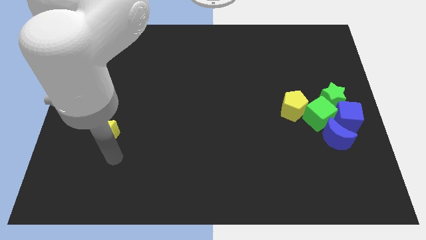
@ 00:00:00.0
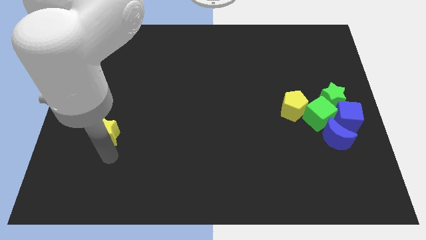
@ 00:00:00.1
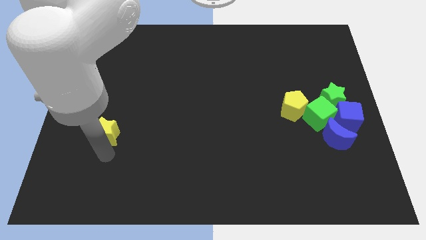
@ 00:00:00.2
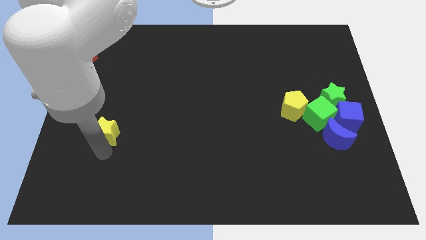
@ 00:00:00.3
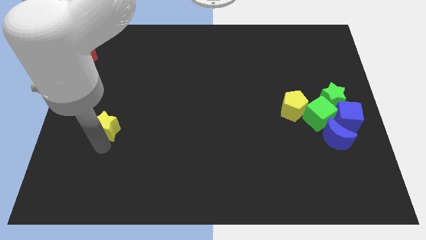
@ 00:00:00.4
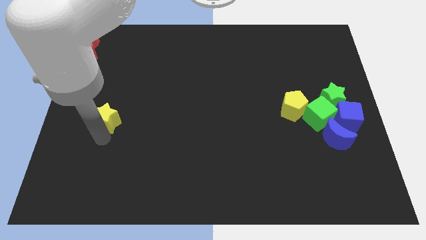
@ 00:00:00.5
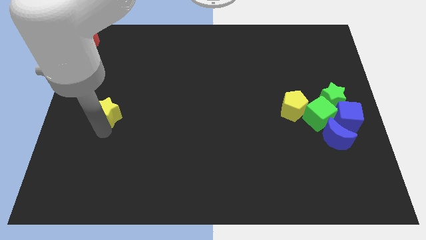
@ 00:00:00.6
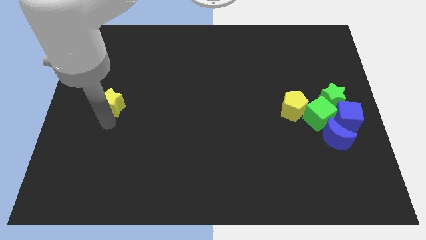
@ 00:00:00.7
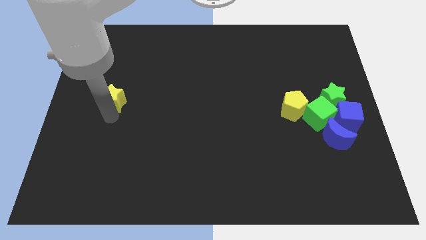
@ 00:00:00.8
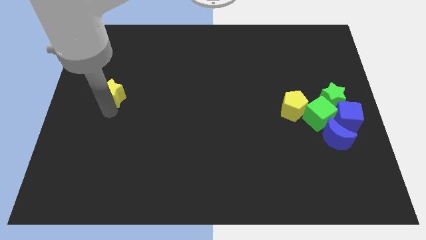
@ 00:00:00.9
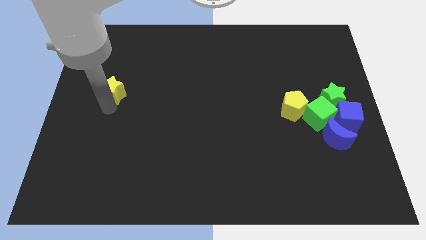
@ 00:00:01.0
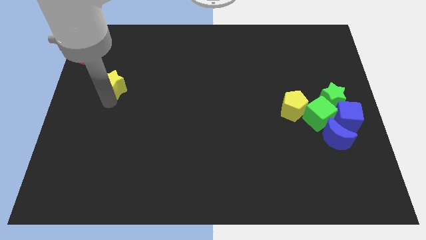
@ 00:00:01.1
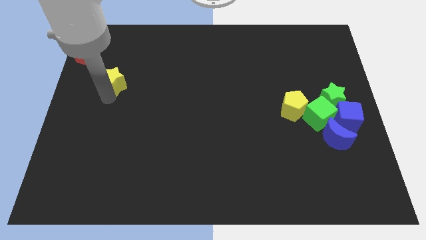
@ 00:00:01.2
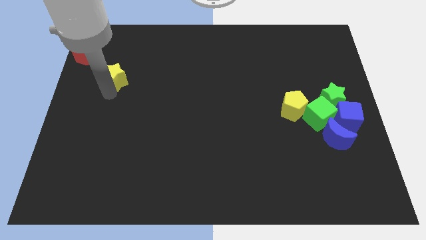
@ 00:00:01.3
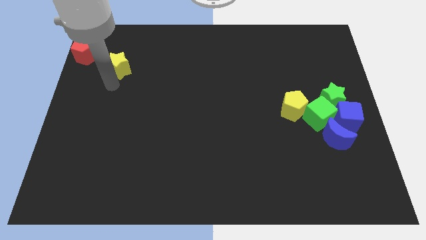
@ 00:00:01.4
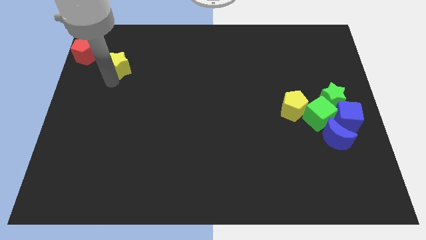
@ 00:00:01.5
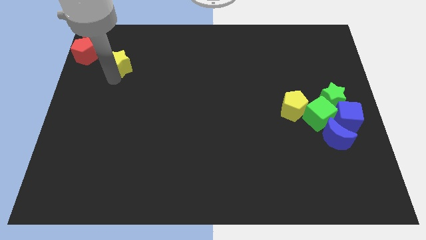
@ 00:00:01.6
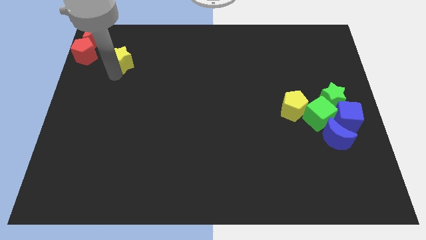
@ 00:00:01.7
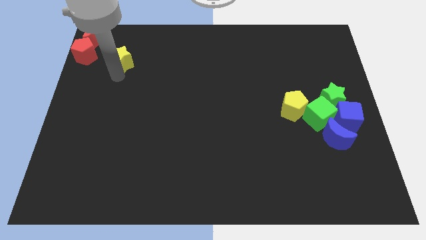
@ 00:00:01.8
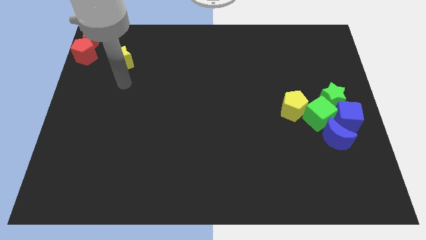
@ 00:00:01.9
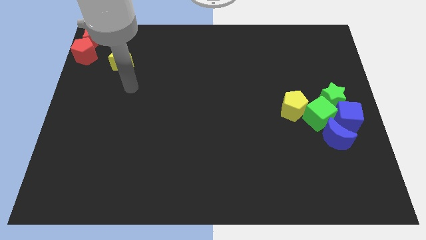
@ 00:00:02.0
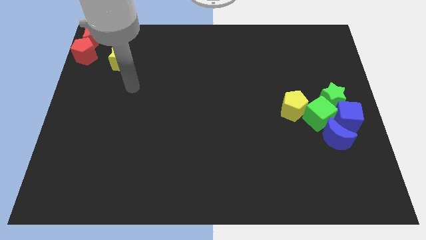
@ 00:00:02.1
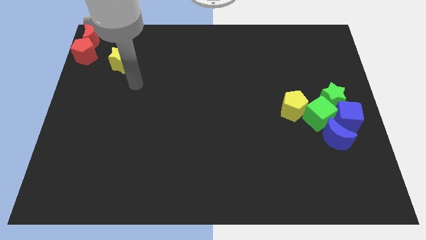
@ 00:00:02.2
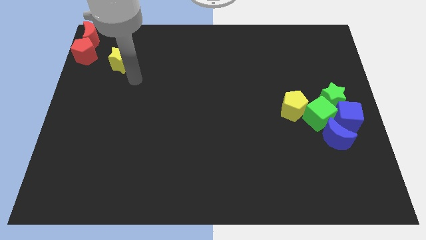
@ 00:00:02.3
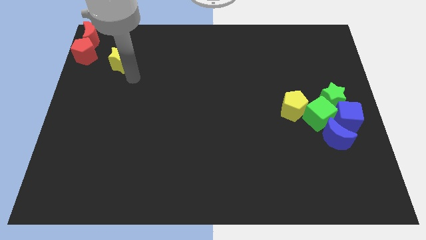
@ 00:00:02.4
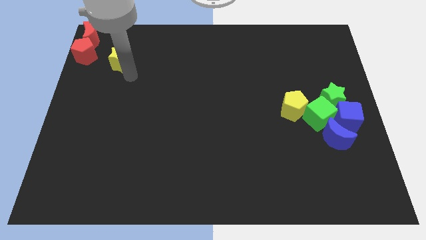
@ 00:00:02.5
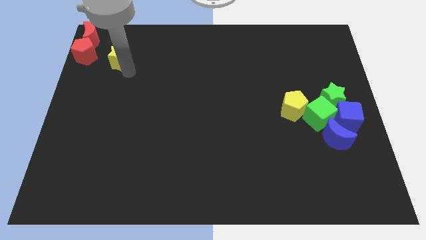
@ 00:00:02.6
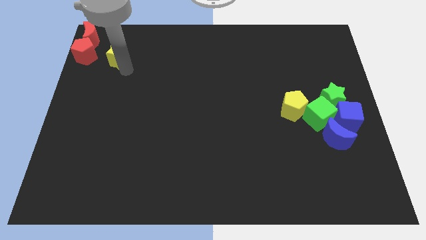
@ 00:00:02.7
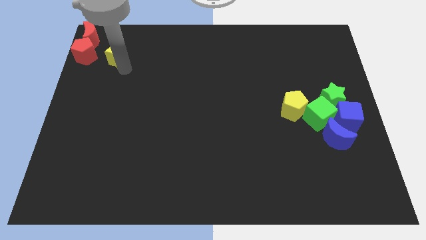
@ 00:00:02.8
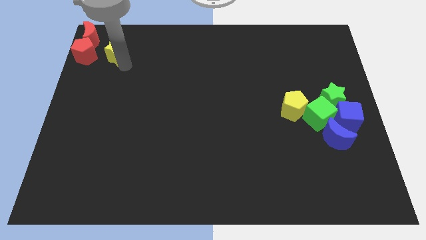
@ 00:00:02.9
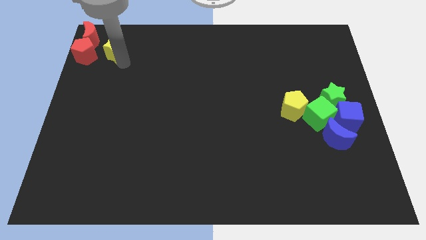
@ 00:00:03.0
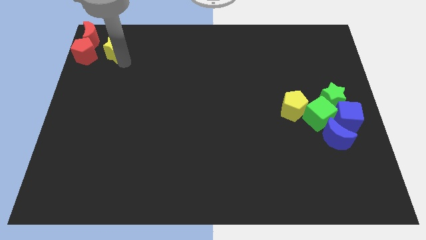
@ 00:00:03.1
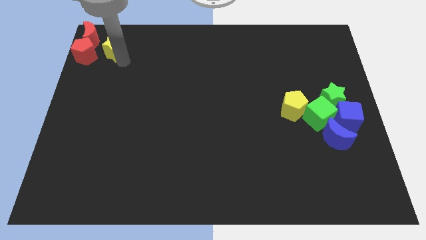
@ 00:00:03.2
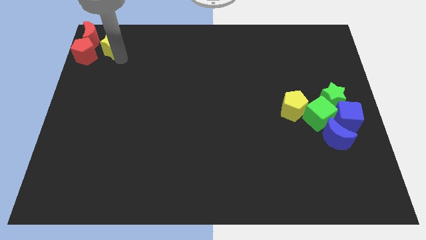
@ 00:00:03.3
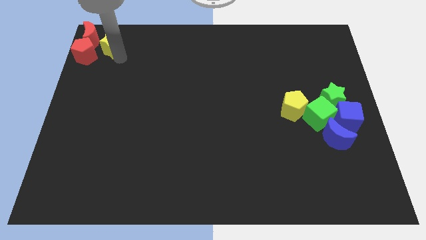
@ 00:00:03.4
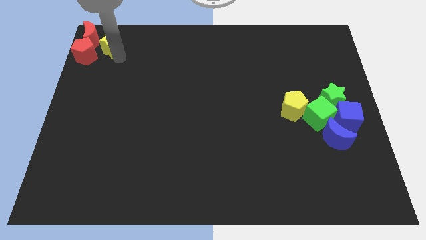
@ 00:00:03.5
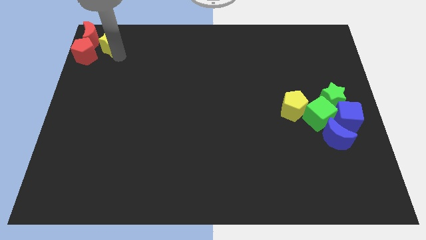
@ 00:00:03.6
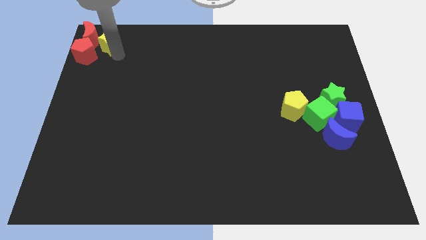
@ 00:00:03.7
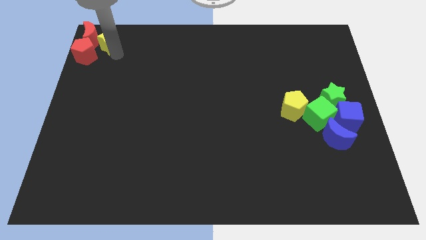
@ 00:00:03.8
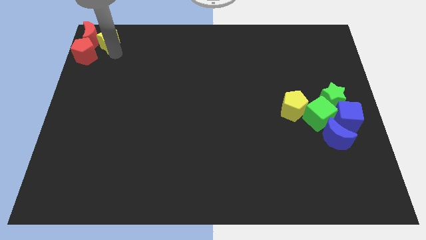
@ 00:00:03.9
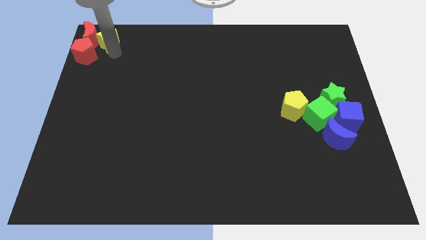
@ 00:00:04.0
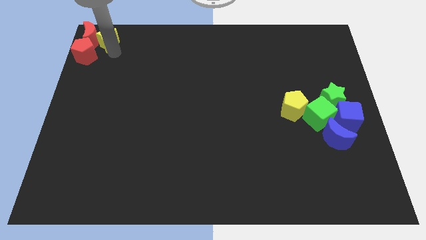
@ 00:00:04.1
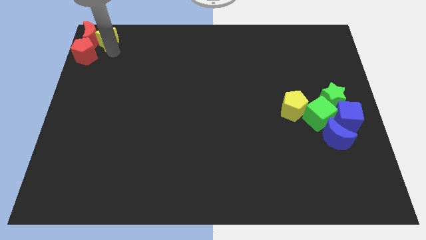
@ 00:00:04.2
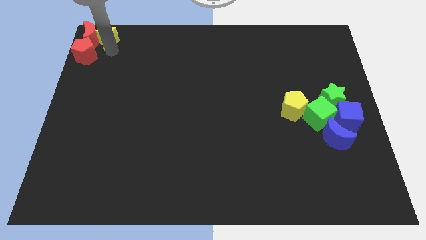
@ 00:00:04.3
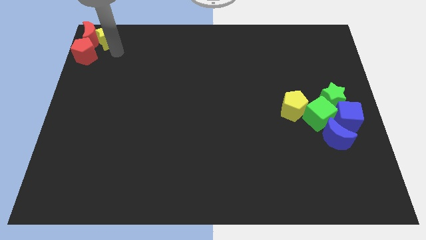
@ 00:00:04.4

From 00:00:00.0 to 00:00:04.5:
push the yellow star upwards beside the red moon

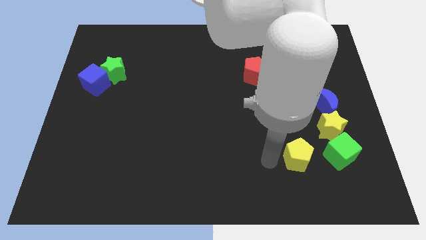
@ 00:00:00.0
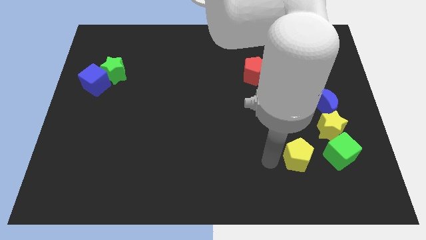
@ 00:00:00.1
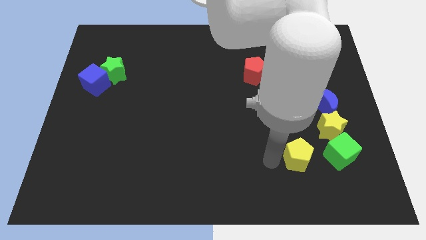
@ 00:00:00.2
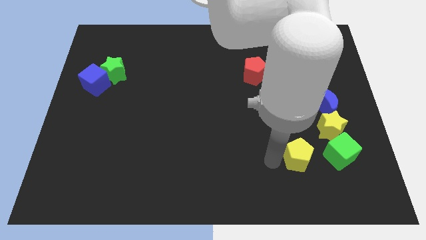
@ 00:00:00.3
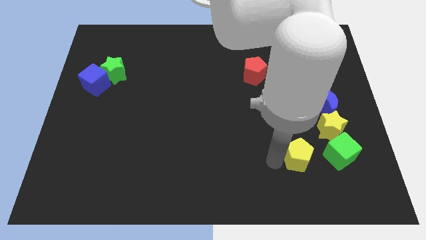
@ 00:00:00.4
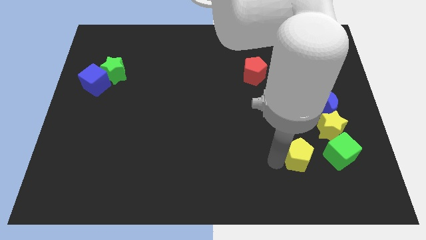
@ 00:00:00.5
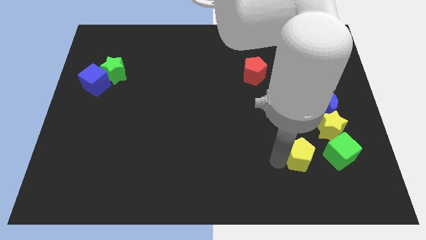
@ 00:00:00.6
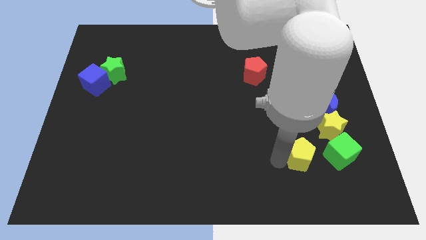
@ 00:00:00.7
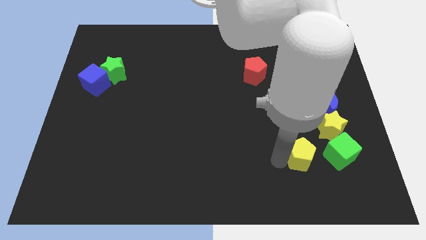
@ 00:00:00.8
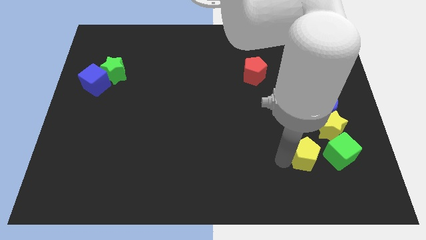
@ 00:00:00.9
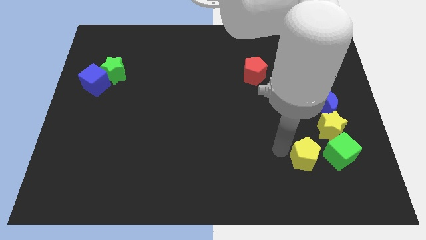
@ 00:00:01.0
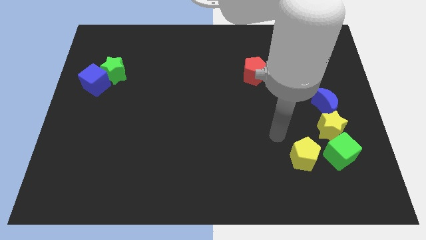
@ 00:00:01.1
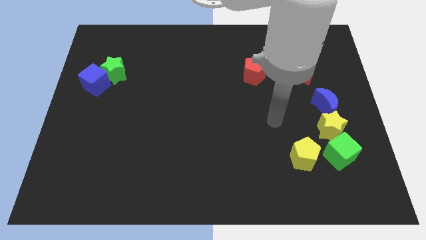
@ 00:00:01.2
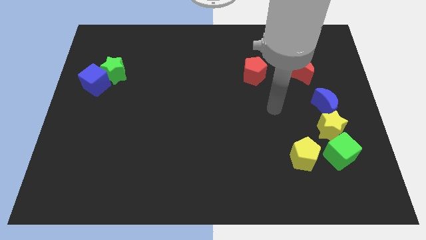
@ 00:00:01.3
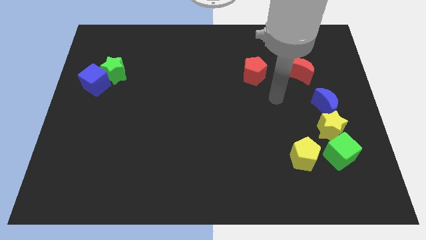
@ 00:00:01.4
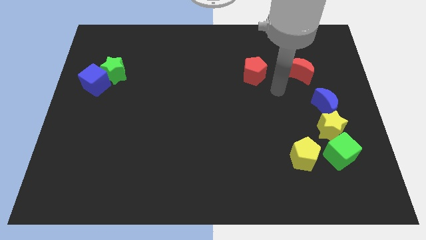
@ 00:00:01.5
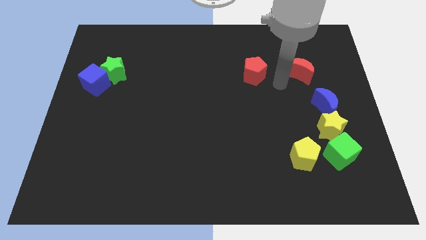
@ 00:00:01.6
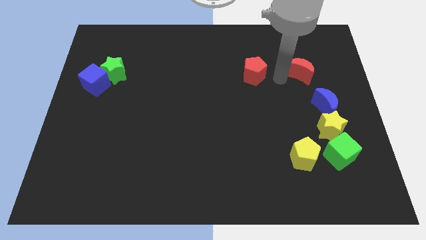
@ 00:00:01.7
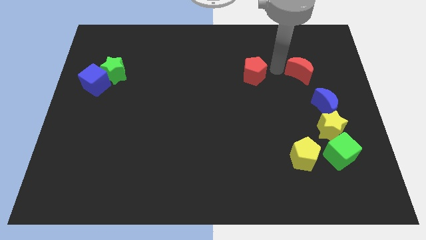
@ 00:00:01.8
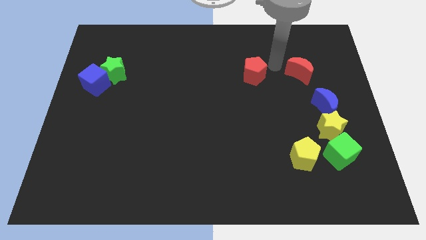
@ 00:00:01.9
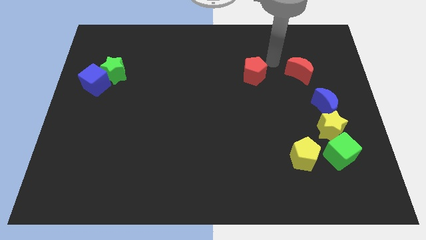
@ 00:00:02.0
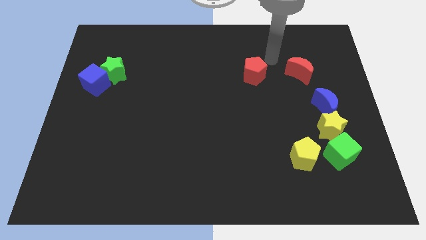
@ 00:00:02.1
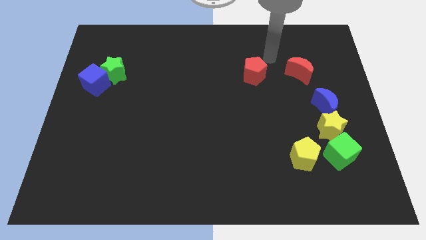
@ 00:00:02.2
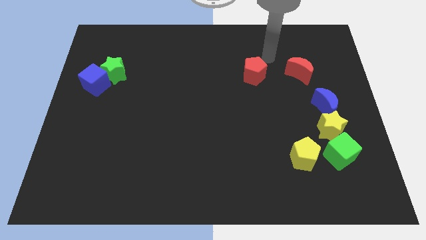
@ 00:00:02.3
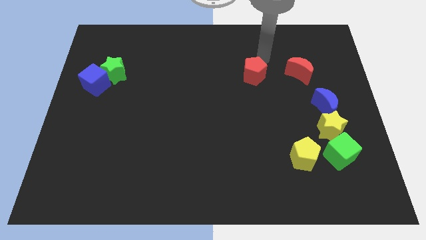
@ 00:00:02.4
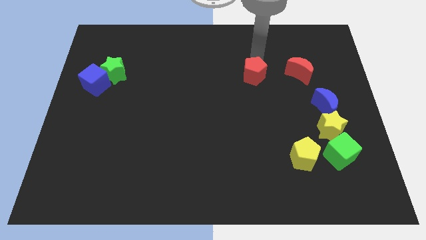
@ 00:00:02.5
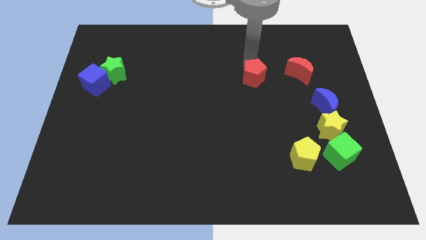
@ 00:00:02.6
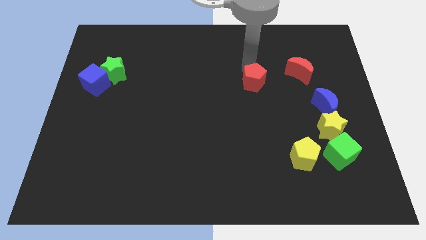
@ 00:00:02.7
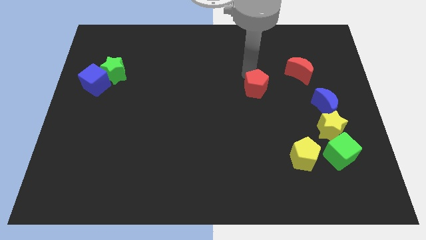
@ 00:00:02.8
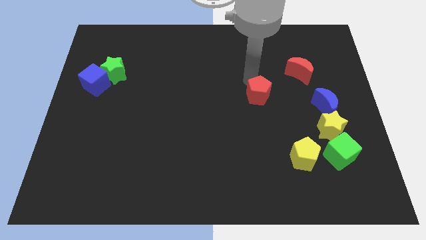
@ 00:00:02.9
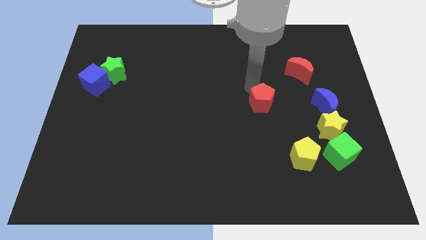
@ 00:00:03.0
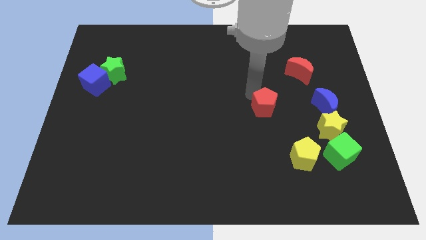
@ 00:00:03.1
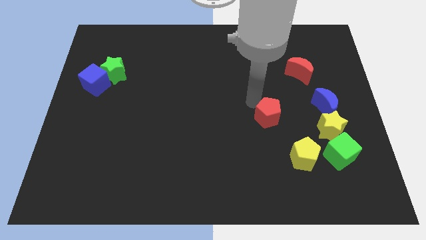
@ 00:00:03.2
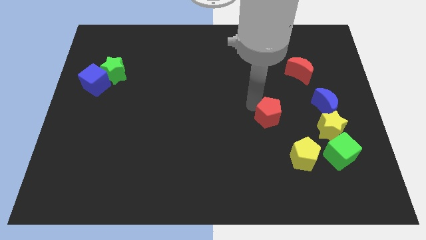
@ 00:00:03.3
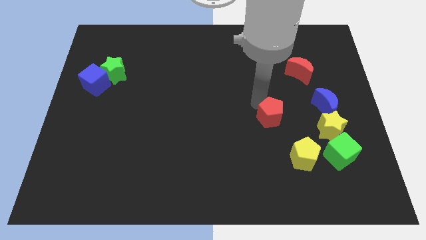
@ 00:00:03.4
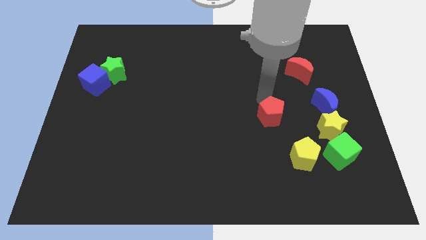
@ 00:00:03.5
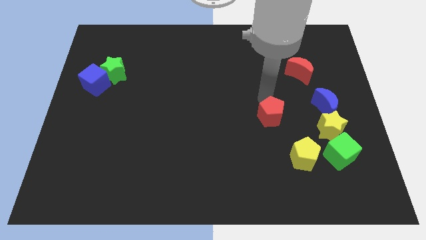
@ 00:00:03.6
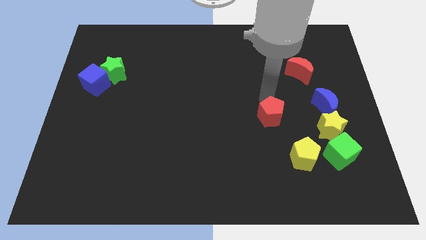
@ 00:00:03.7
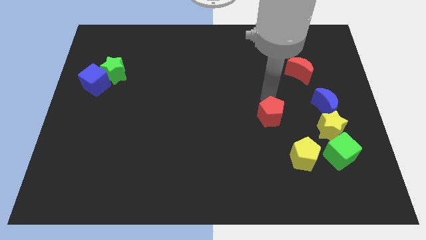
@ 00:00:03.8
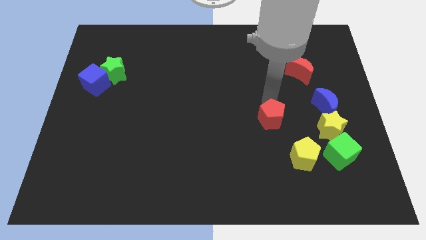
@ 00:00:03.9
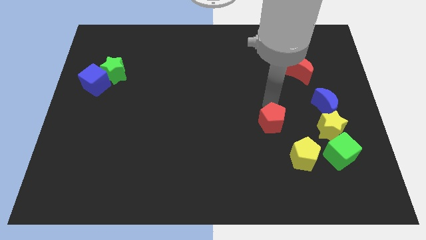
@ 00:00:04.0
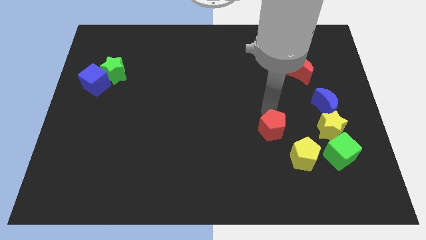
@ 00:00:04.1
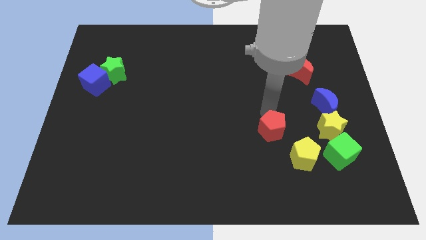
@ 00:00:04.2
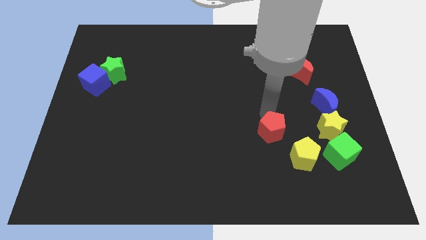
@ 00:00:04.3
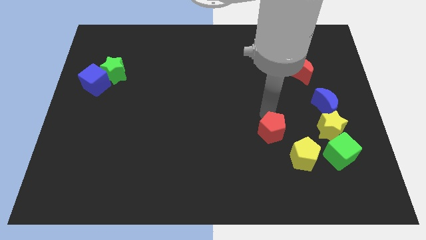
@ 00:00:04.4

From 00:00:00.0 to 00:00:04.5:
move the red pentagon slightly down
